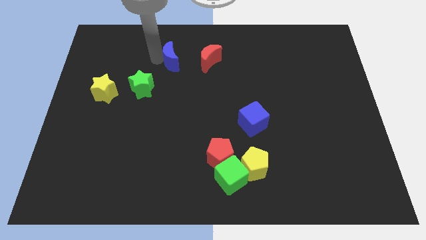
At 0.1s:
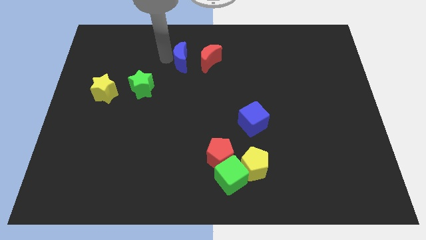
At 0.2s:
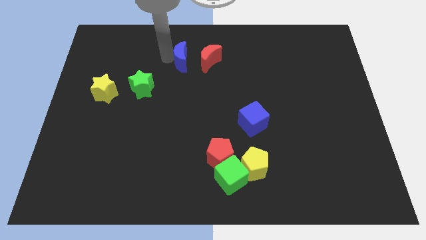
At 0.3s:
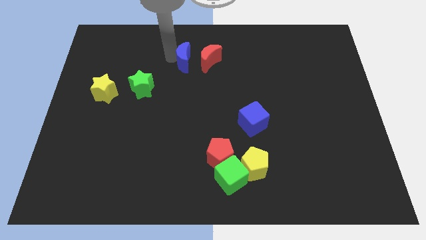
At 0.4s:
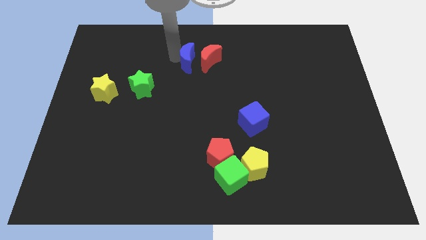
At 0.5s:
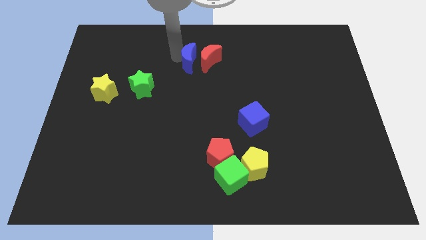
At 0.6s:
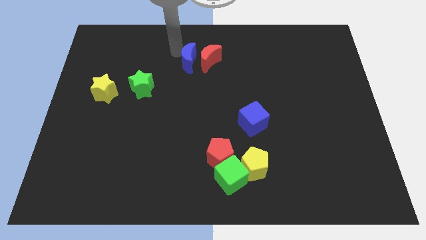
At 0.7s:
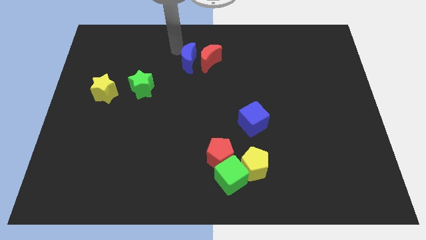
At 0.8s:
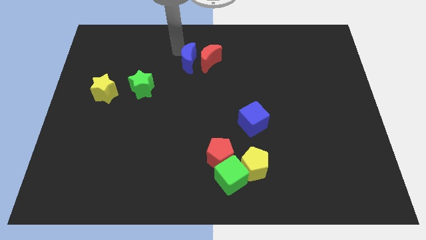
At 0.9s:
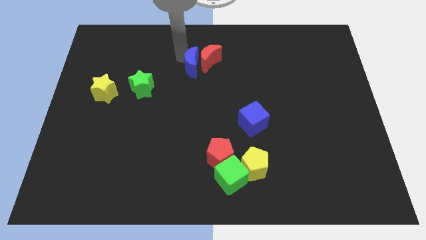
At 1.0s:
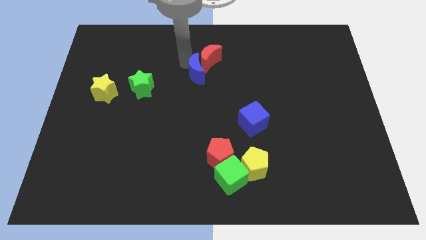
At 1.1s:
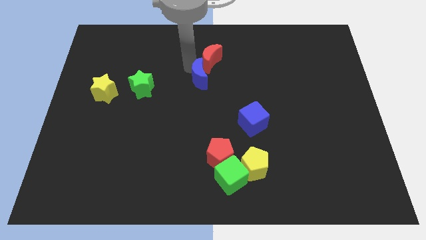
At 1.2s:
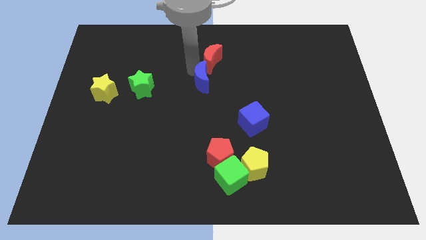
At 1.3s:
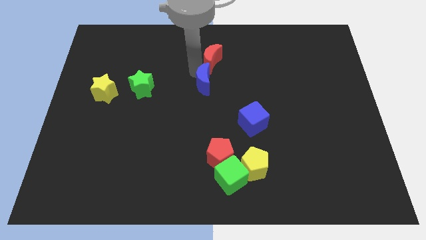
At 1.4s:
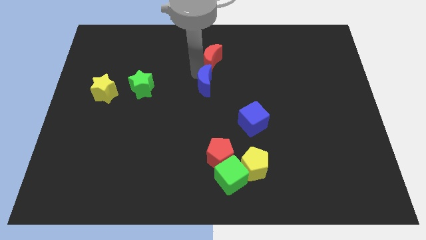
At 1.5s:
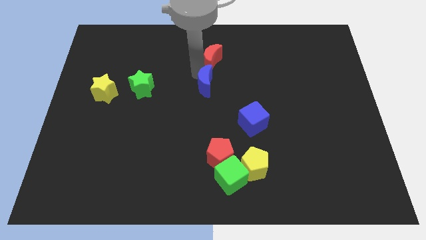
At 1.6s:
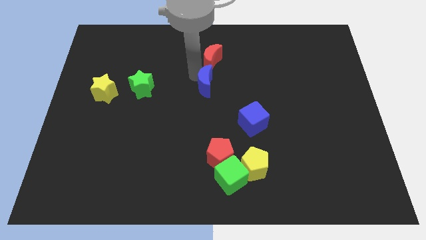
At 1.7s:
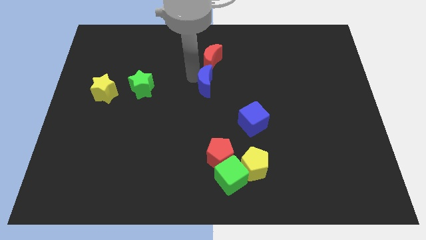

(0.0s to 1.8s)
place the blue crescent below the red moon

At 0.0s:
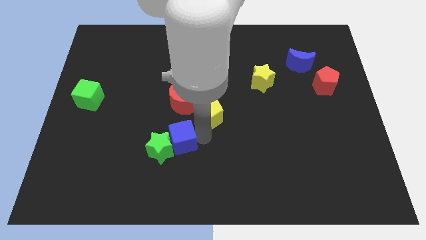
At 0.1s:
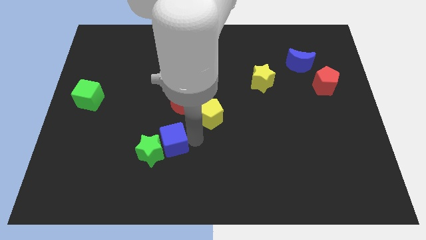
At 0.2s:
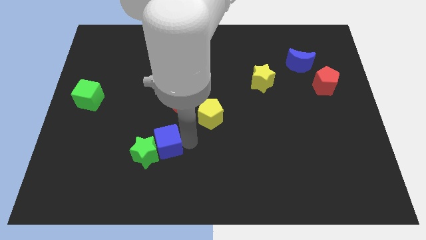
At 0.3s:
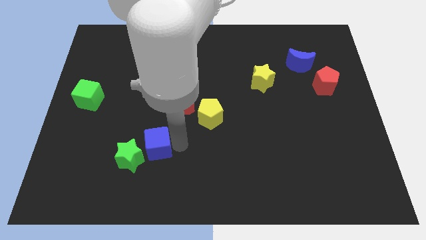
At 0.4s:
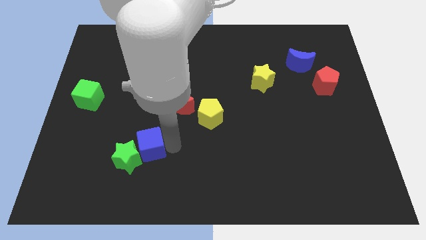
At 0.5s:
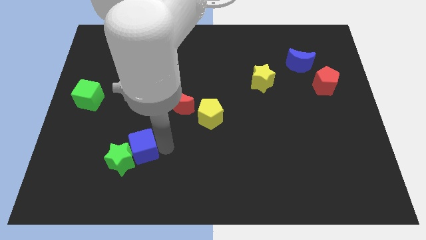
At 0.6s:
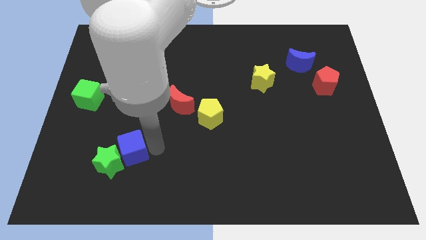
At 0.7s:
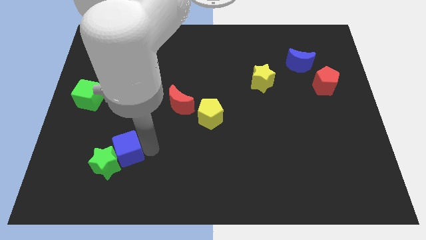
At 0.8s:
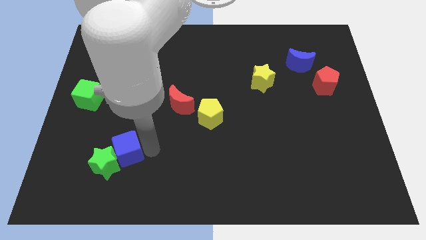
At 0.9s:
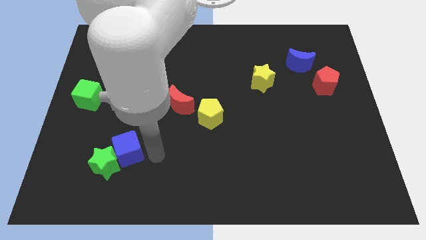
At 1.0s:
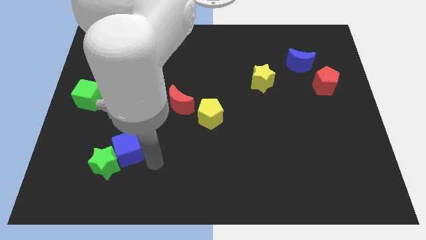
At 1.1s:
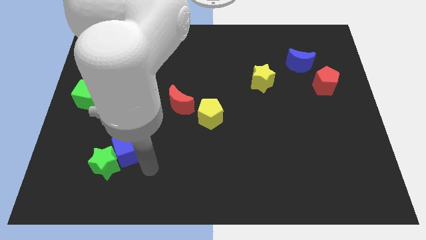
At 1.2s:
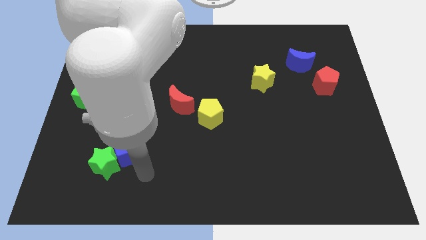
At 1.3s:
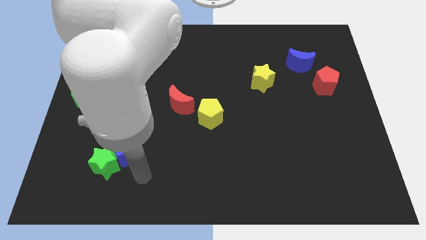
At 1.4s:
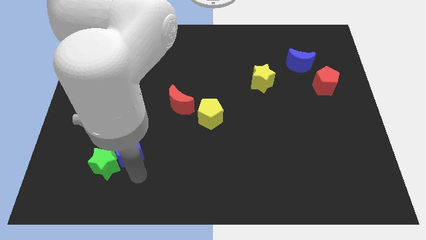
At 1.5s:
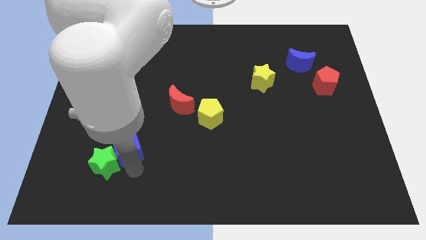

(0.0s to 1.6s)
move the green star and blue cube towards the bottom left corner of the board

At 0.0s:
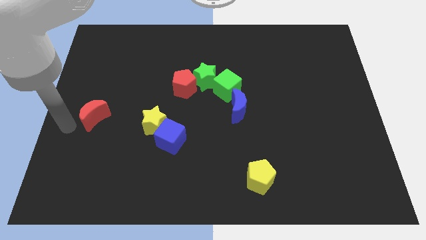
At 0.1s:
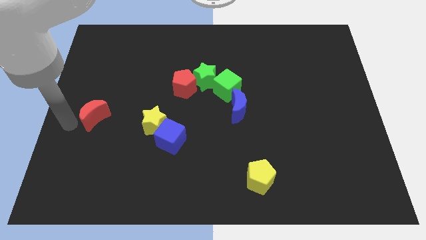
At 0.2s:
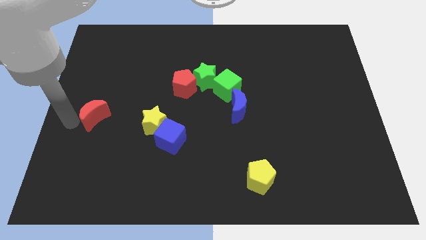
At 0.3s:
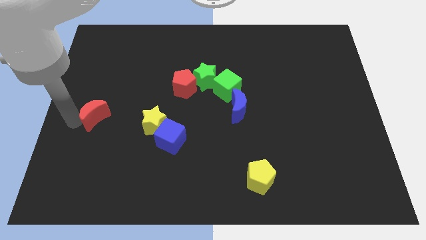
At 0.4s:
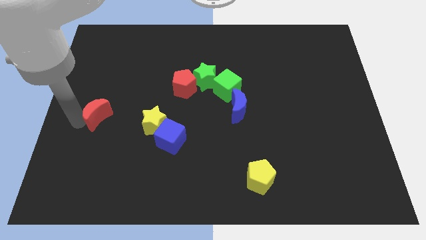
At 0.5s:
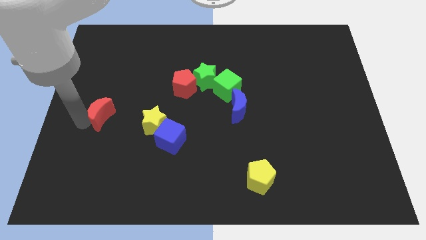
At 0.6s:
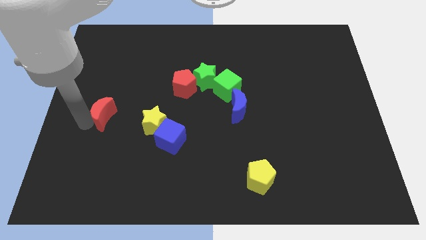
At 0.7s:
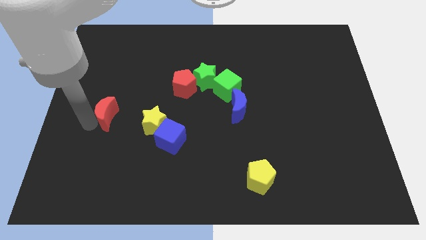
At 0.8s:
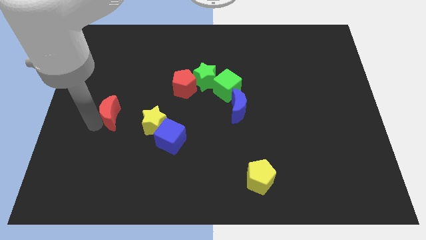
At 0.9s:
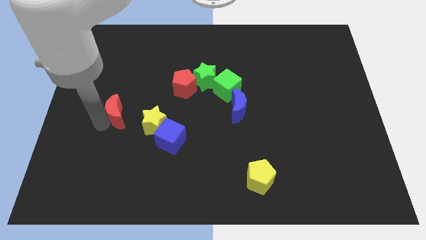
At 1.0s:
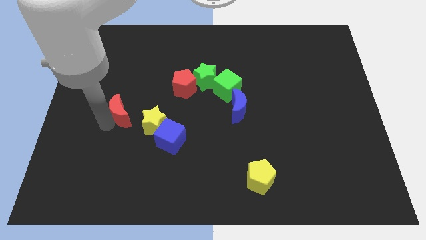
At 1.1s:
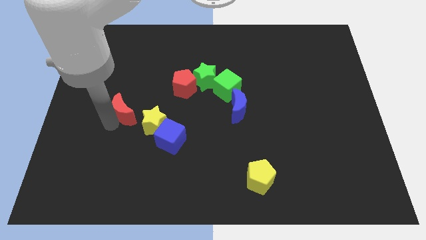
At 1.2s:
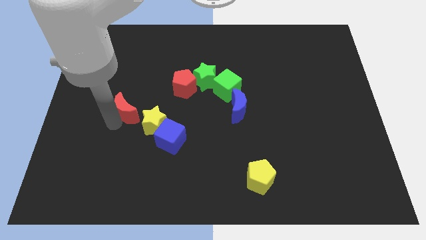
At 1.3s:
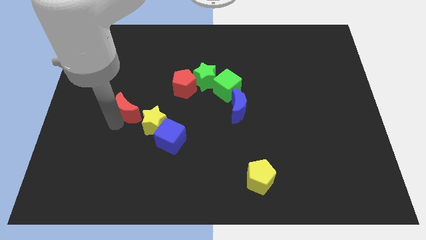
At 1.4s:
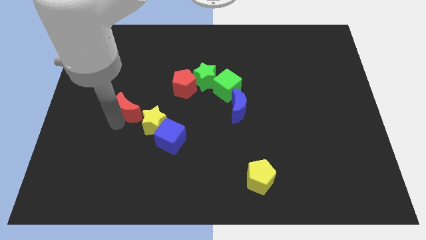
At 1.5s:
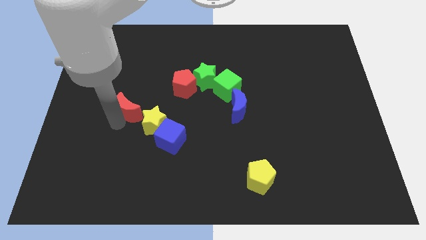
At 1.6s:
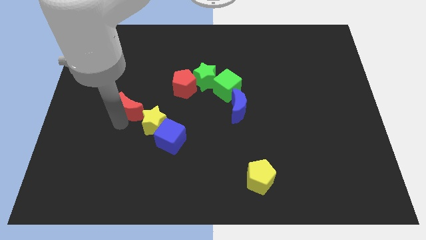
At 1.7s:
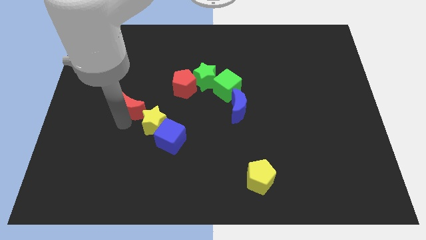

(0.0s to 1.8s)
drag the red moon to the top left of the yellow star

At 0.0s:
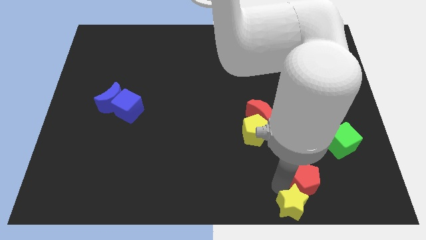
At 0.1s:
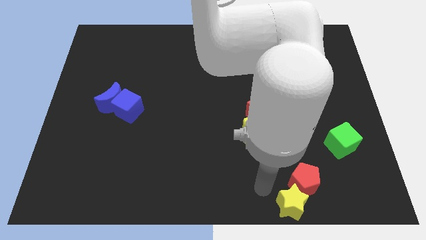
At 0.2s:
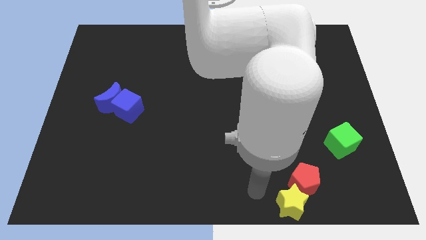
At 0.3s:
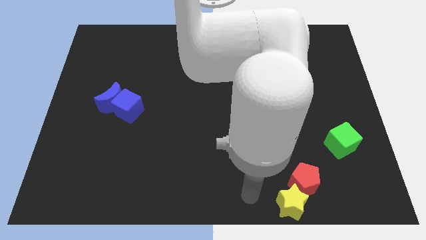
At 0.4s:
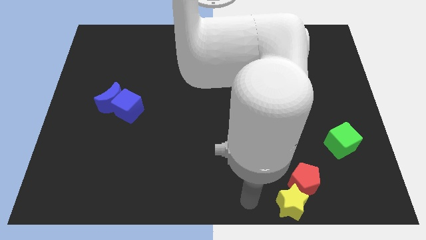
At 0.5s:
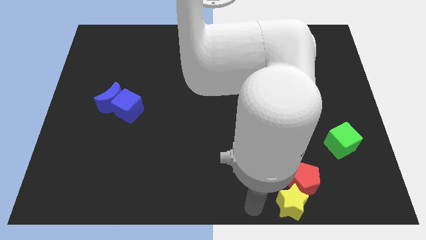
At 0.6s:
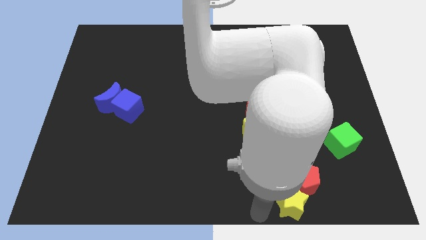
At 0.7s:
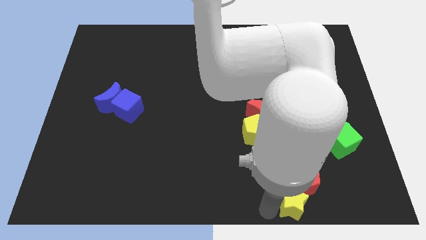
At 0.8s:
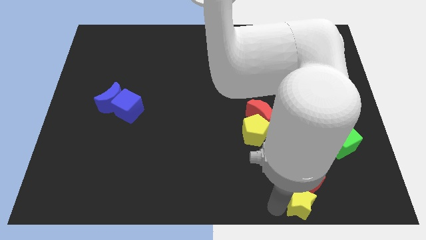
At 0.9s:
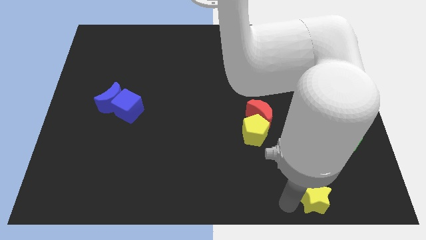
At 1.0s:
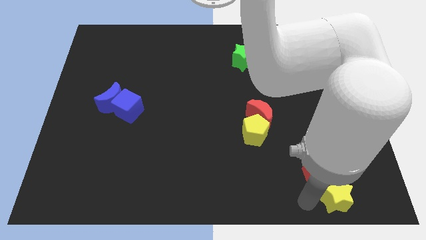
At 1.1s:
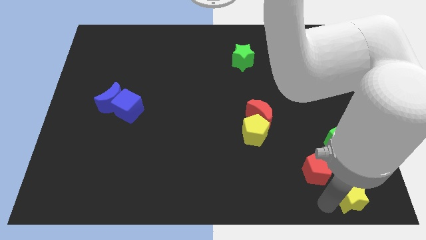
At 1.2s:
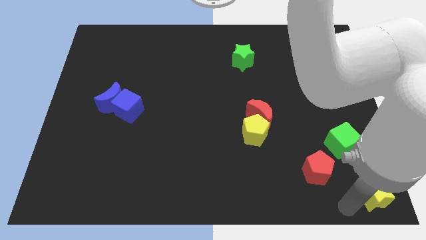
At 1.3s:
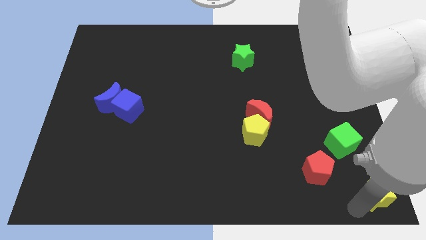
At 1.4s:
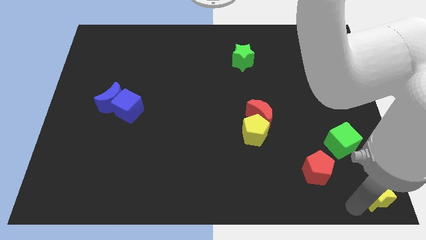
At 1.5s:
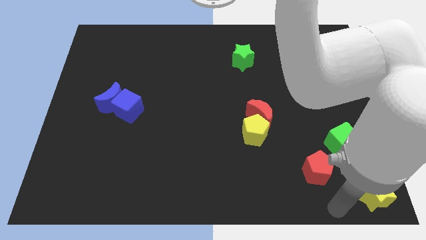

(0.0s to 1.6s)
separate yellow star from the red pentagon

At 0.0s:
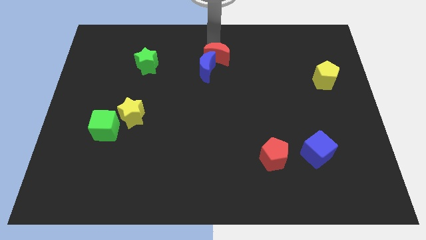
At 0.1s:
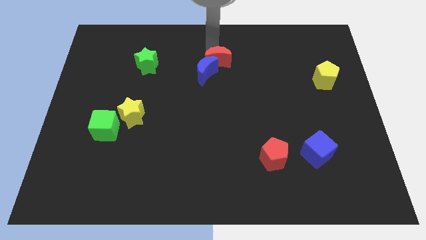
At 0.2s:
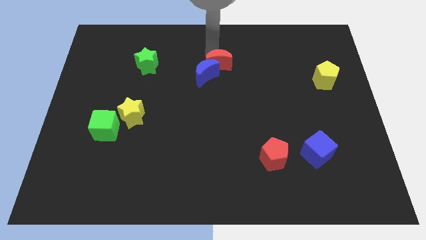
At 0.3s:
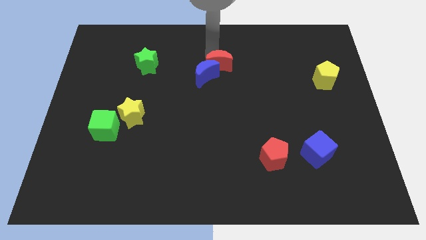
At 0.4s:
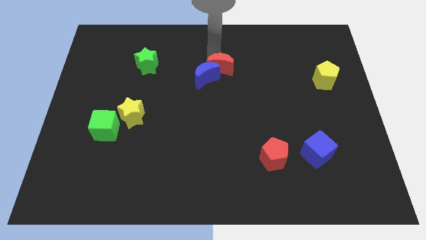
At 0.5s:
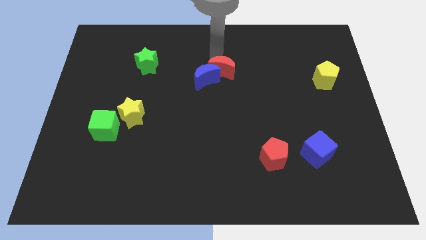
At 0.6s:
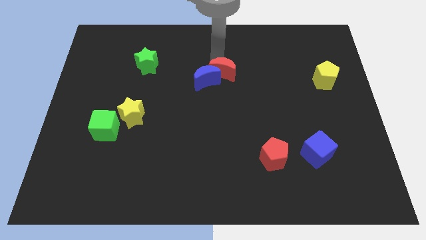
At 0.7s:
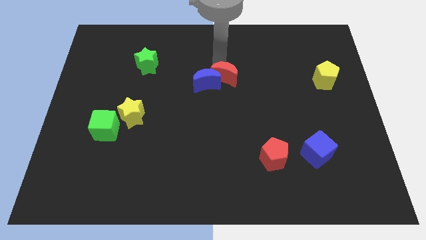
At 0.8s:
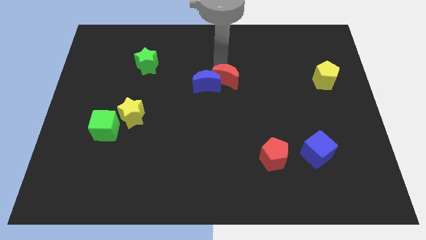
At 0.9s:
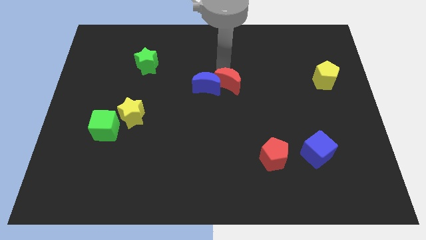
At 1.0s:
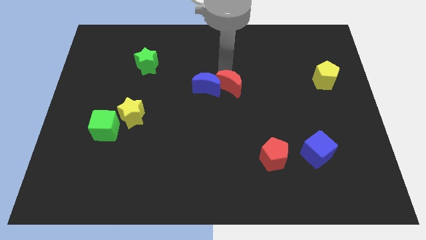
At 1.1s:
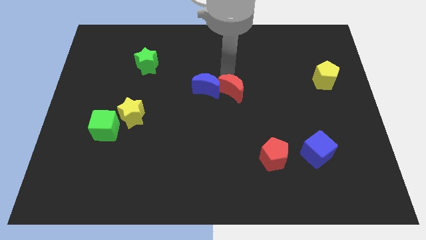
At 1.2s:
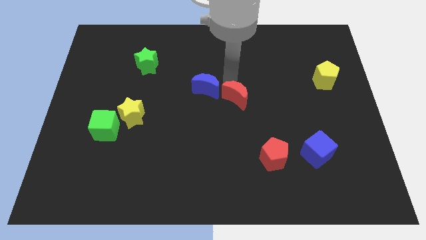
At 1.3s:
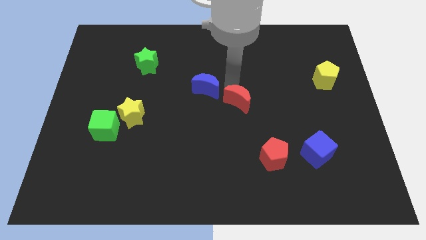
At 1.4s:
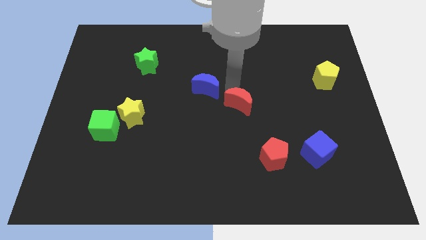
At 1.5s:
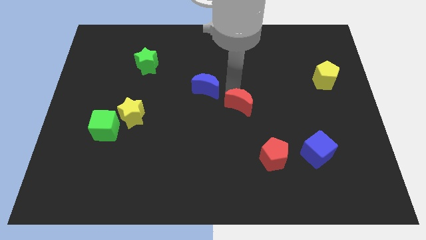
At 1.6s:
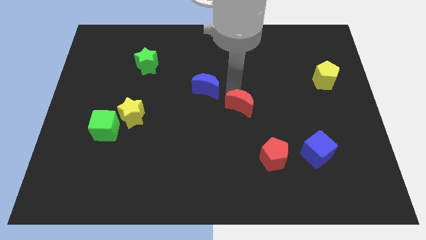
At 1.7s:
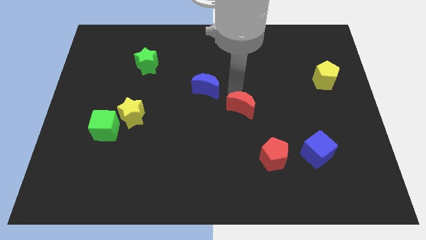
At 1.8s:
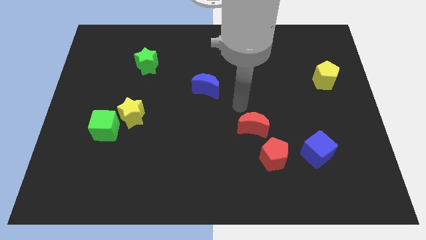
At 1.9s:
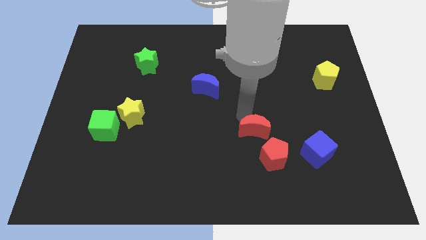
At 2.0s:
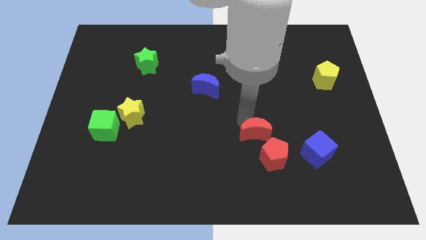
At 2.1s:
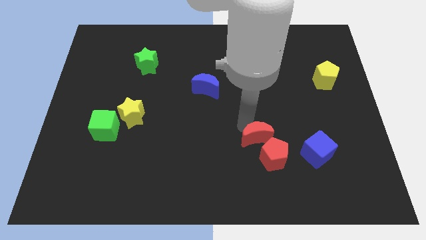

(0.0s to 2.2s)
separate the blue moon and the red moon
